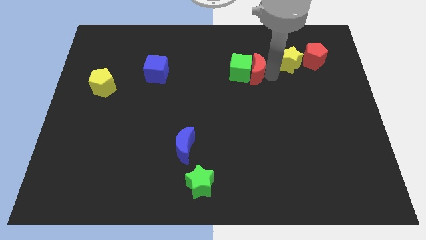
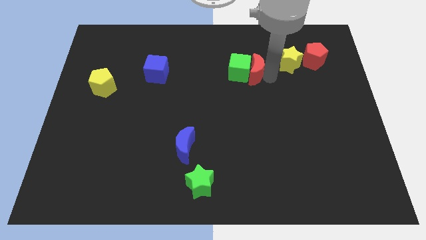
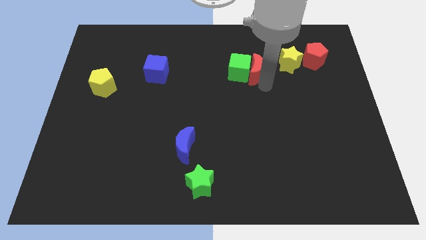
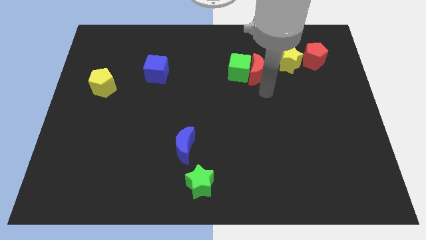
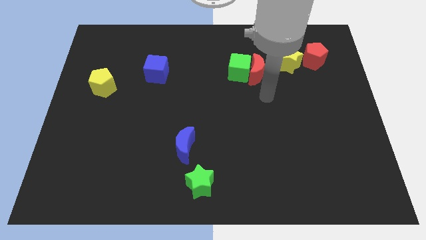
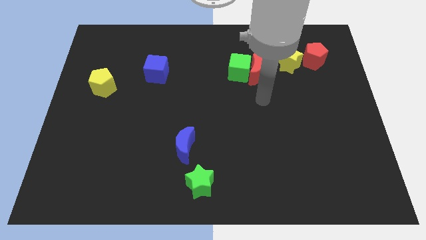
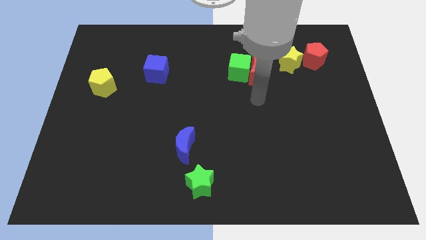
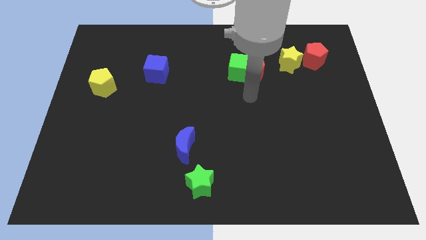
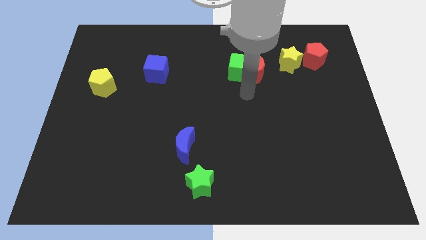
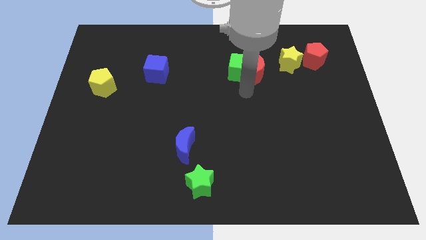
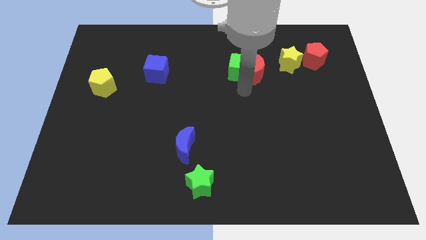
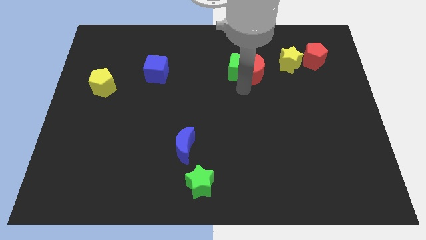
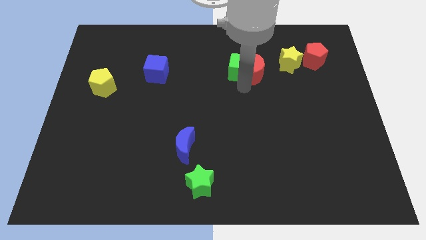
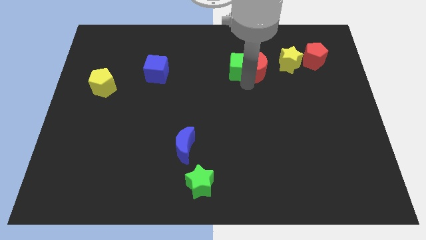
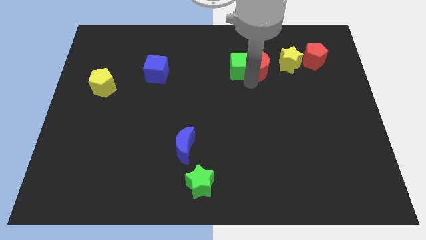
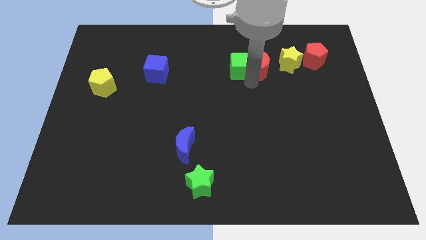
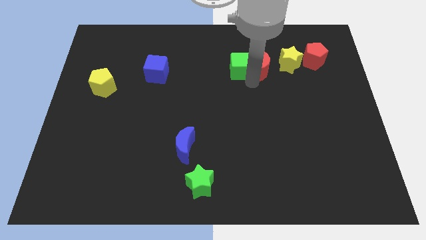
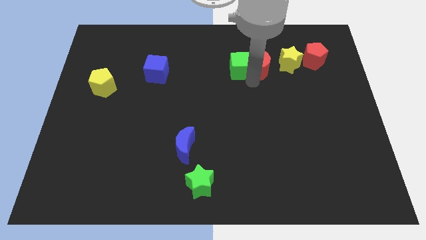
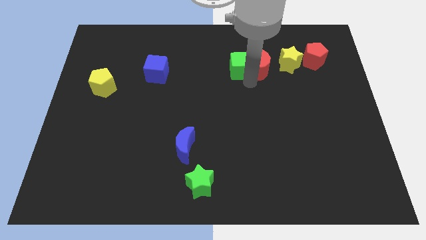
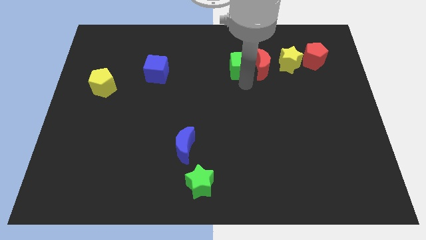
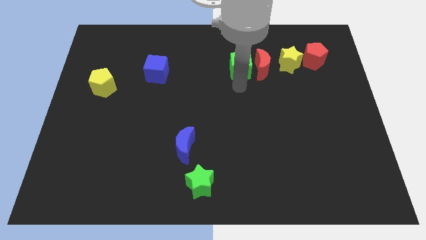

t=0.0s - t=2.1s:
push the red moon to the left of the yellow star

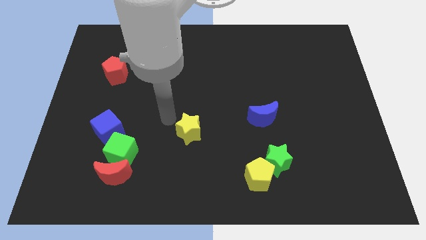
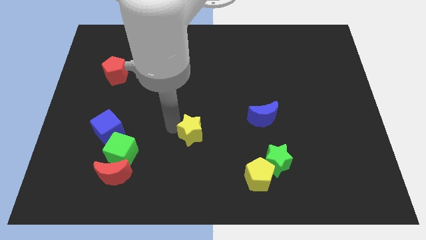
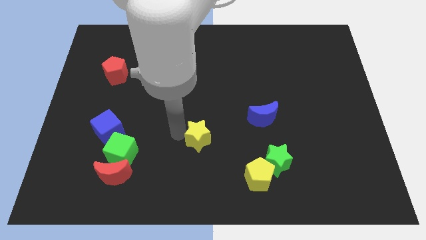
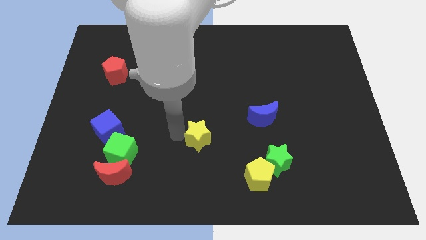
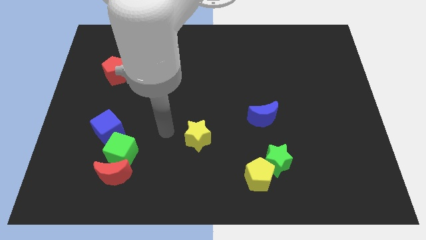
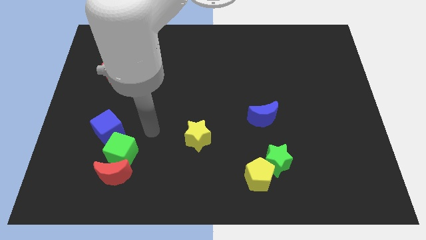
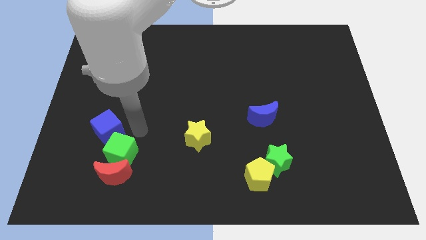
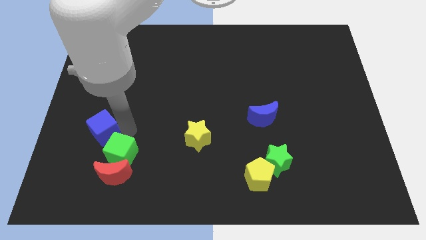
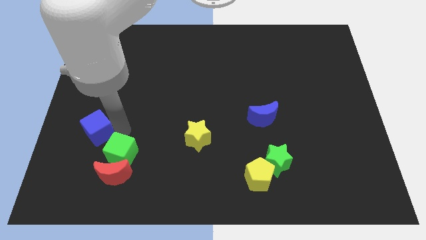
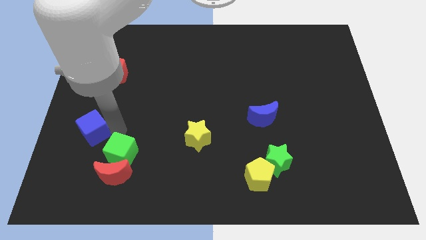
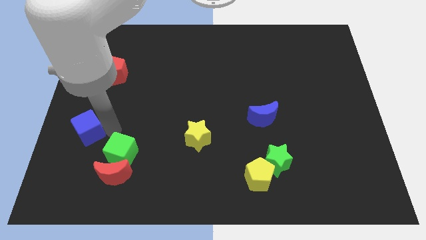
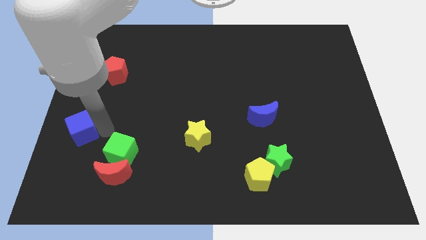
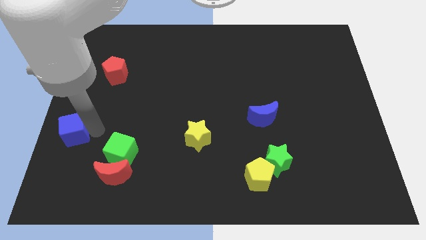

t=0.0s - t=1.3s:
move your arm away from yellow star

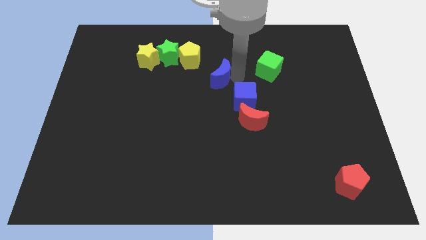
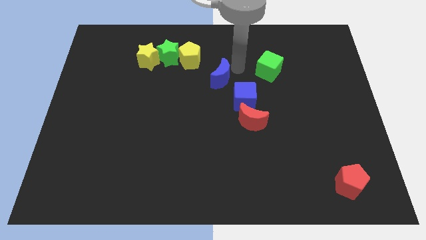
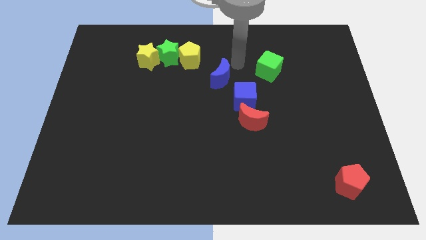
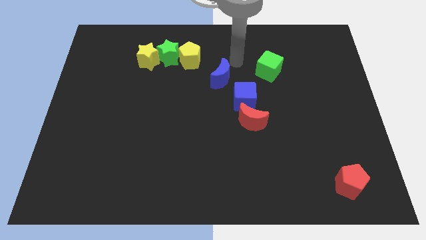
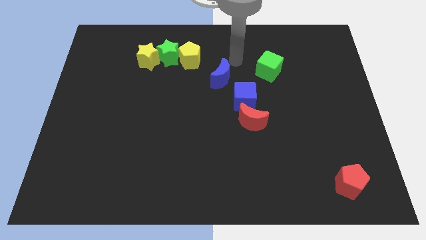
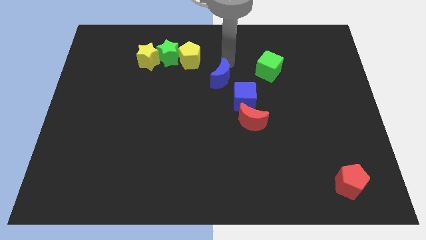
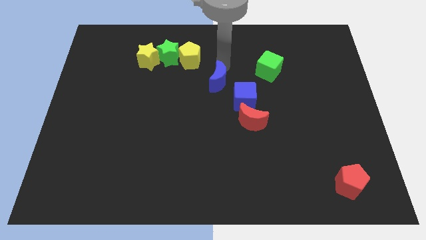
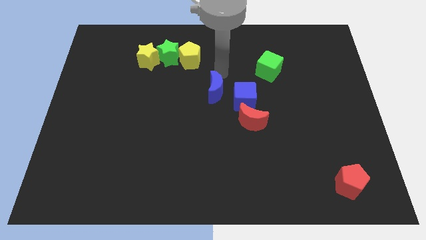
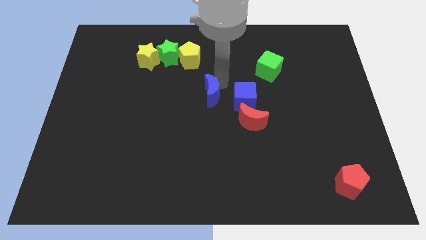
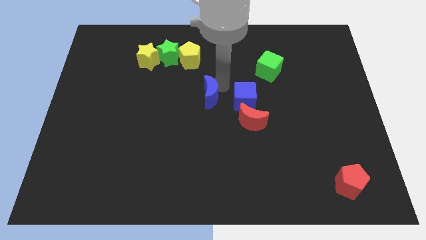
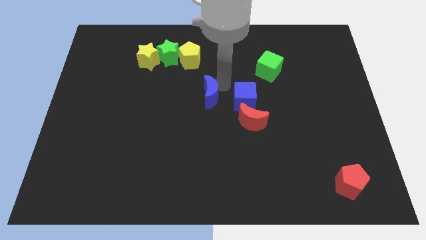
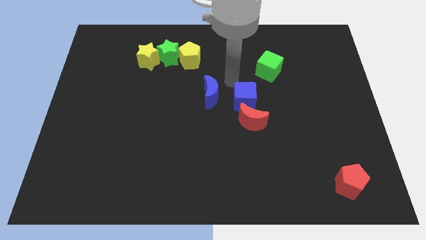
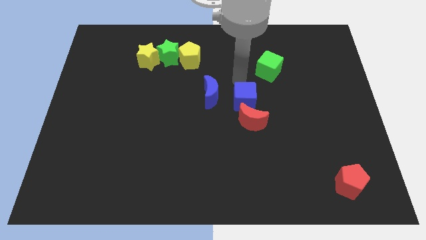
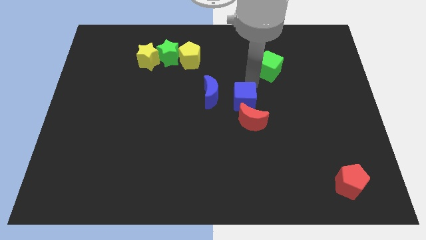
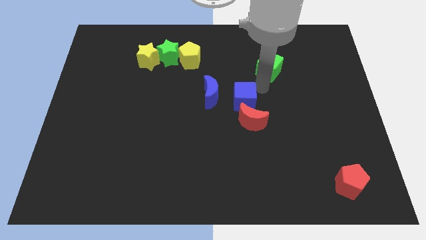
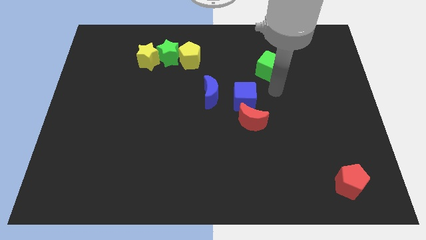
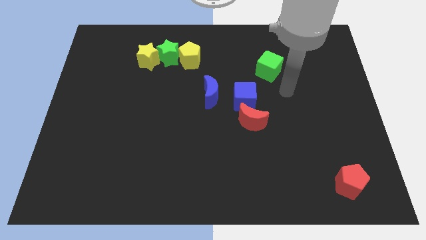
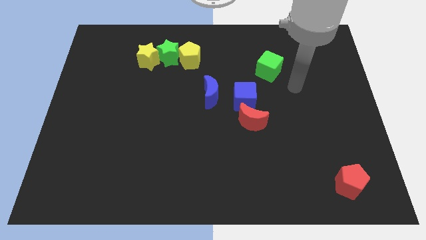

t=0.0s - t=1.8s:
push the blue moon to the left side of the blue cube

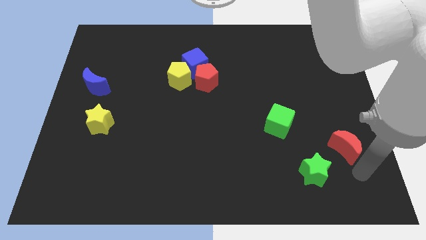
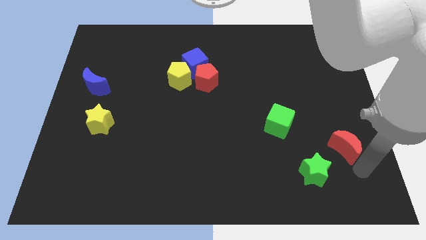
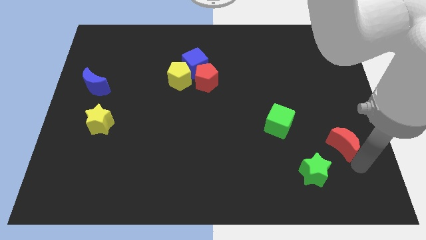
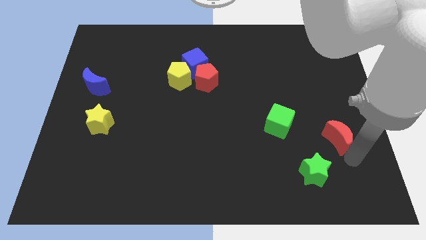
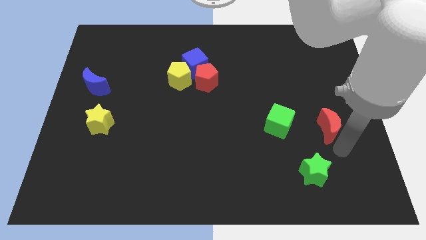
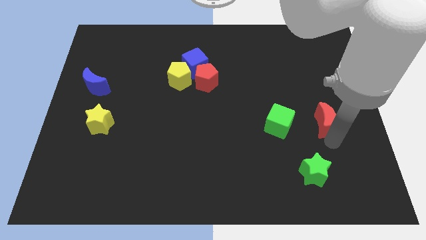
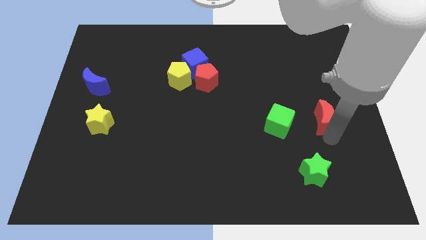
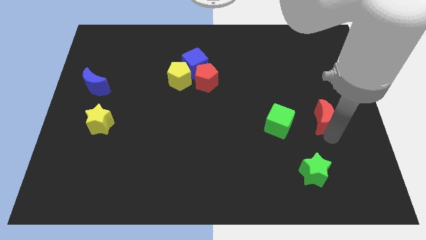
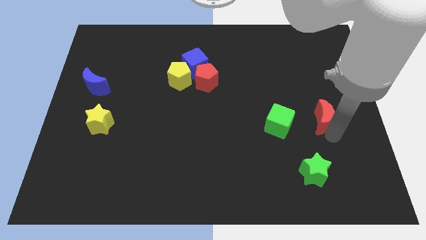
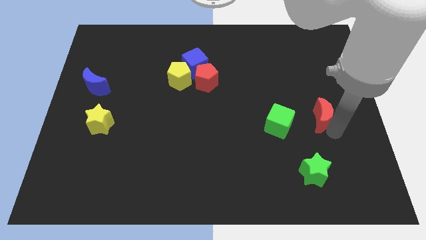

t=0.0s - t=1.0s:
place the red moon to the right side of green cube

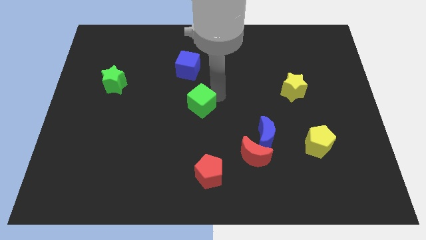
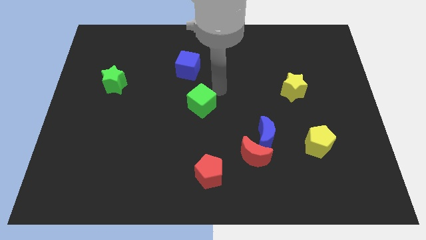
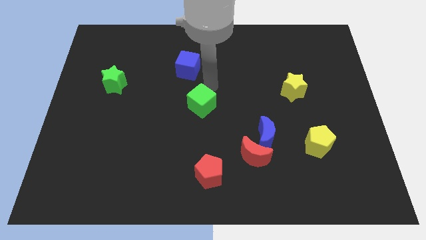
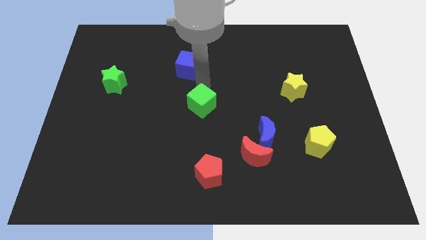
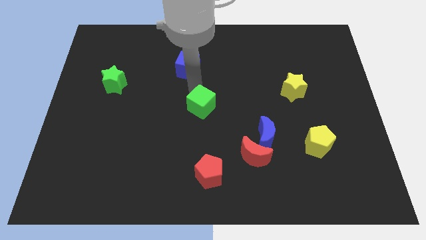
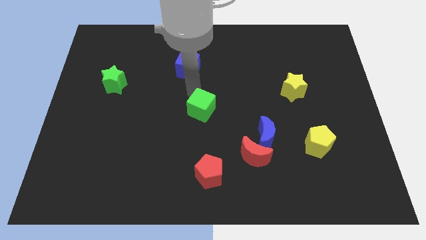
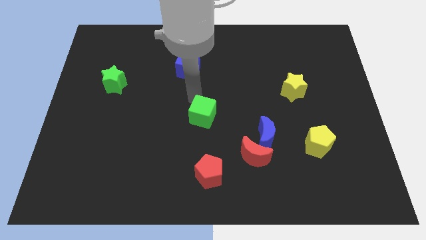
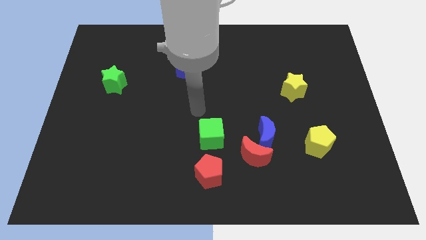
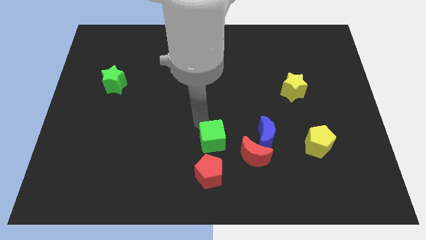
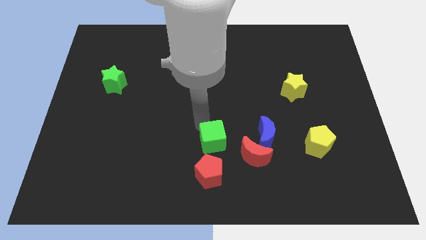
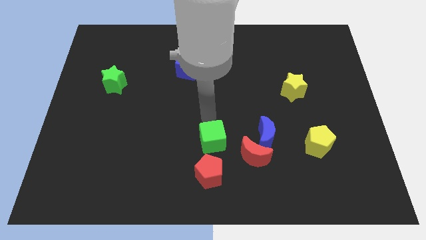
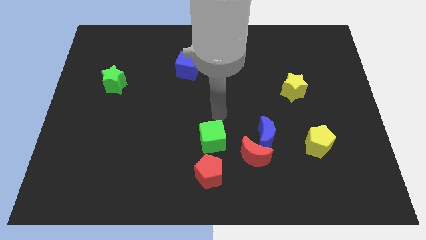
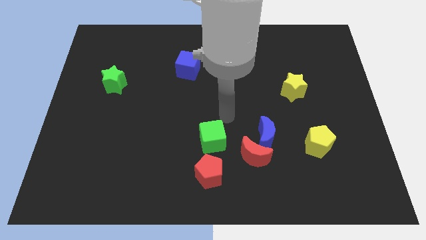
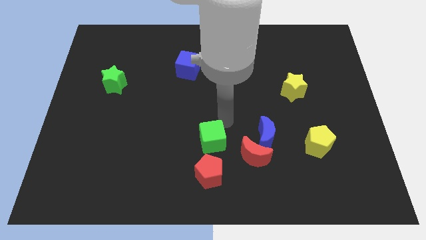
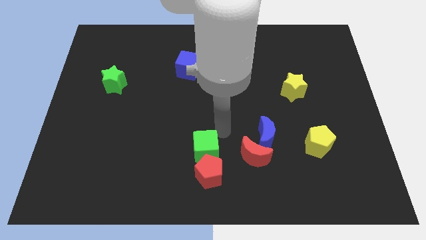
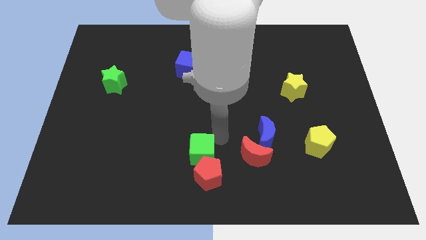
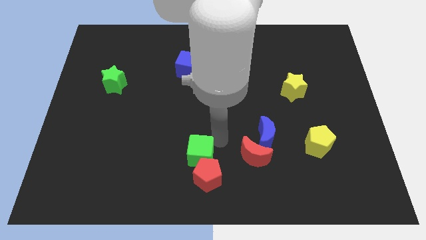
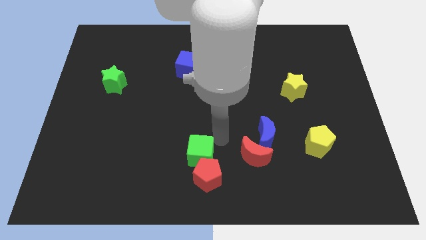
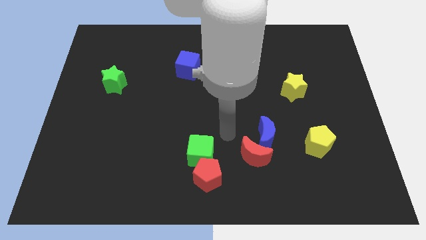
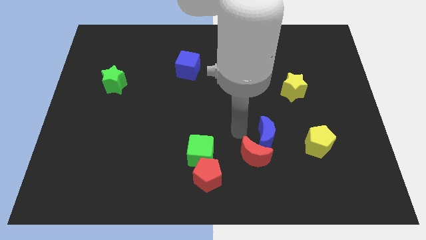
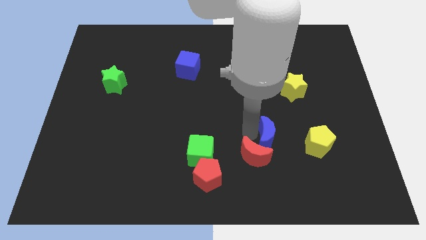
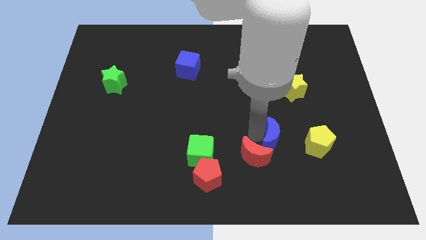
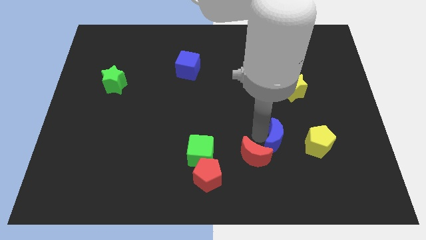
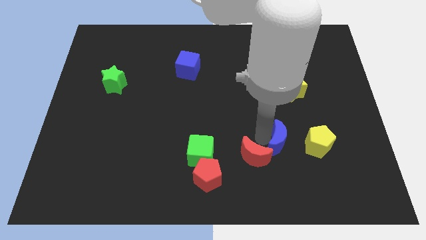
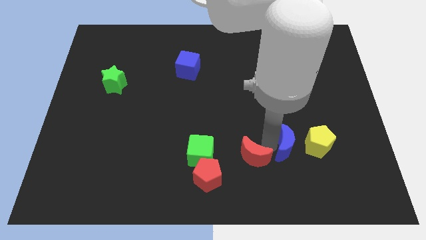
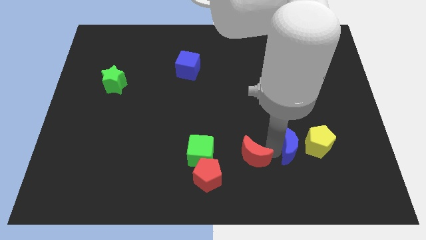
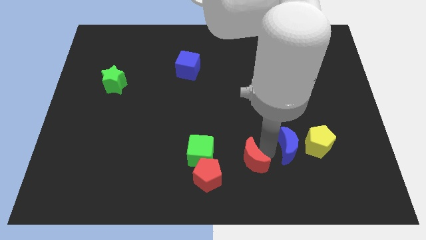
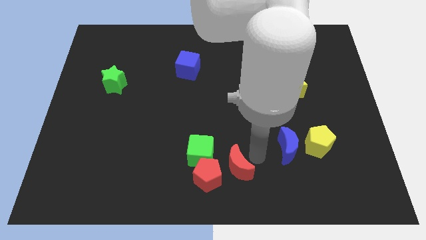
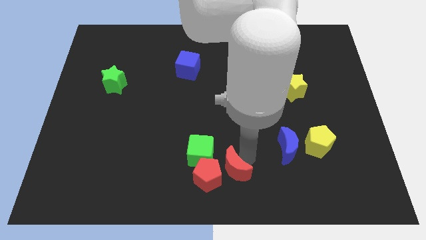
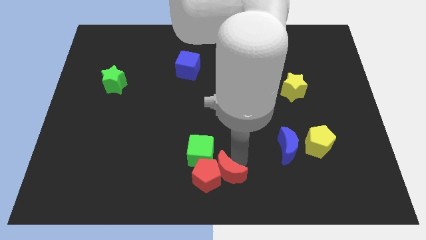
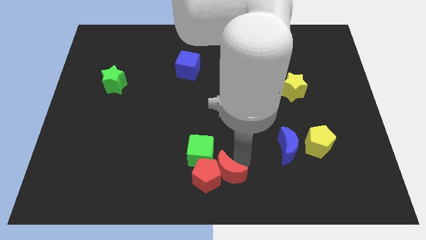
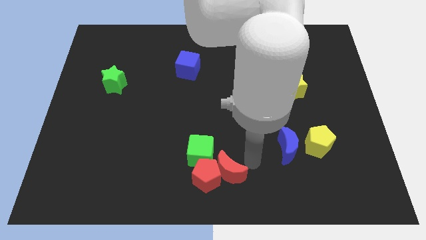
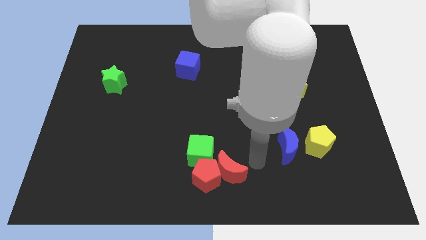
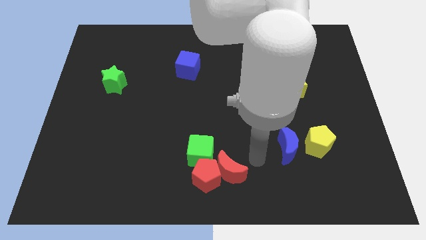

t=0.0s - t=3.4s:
put both the red blocks and green cube at the bottom center of the board
